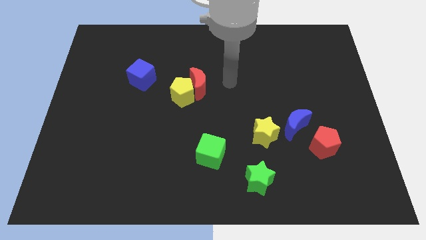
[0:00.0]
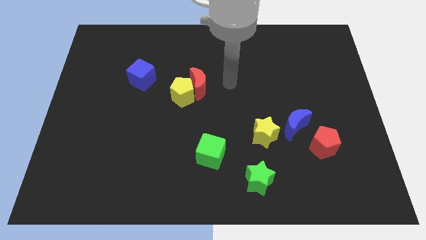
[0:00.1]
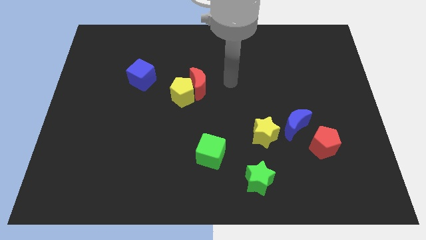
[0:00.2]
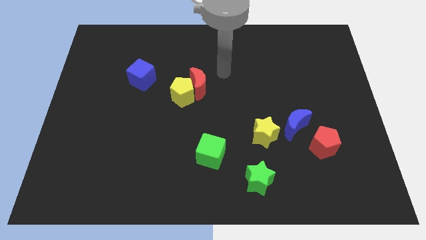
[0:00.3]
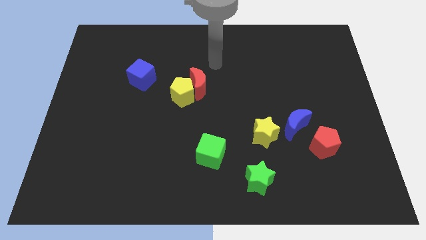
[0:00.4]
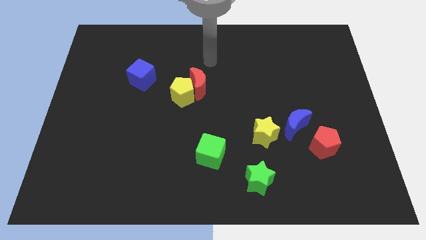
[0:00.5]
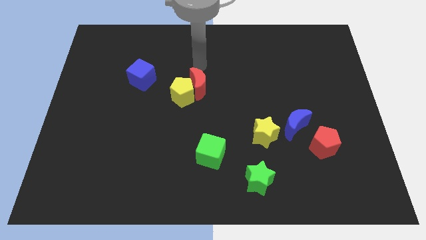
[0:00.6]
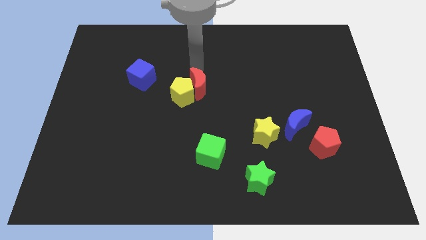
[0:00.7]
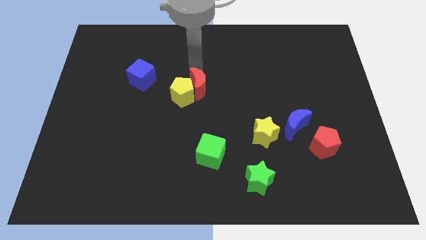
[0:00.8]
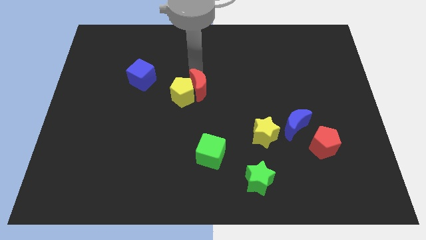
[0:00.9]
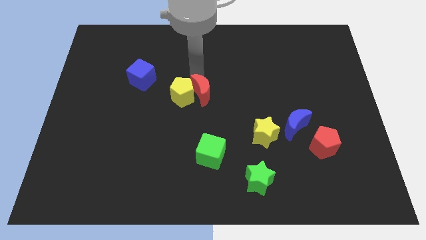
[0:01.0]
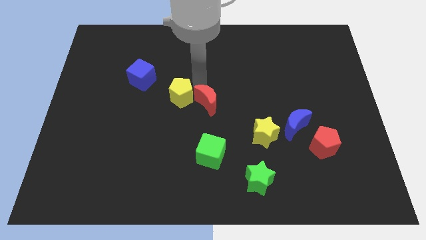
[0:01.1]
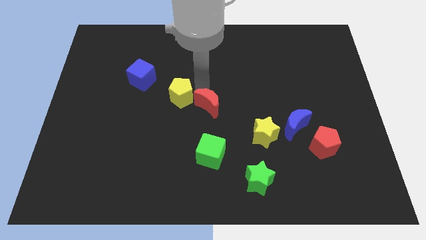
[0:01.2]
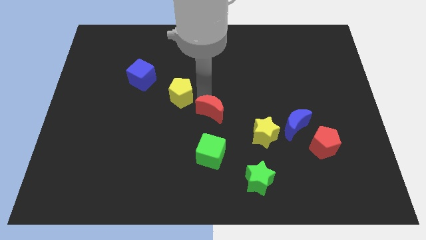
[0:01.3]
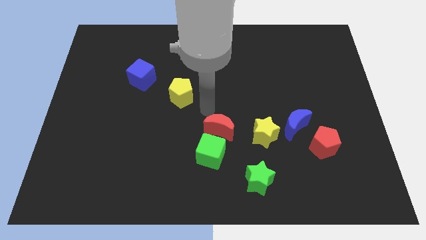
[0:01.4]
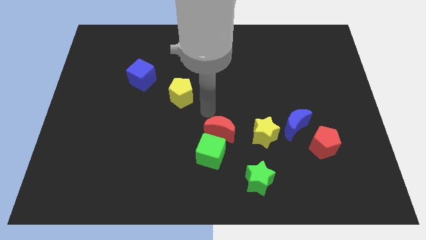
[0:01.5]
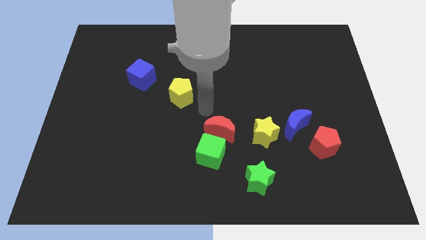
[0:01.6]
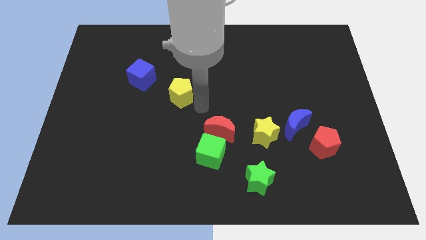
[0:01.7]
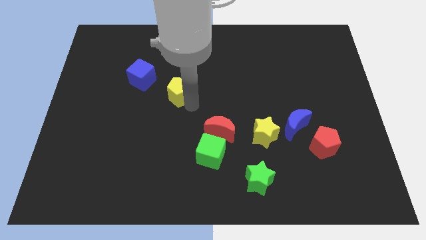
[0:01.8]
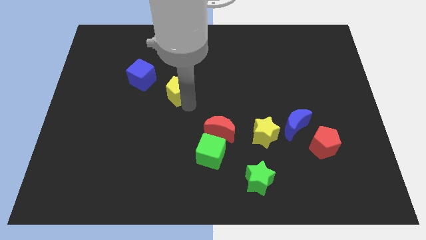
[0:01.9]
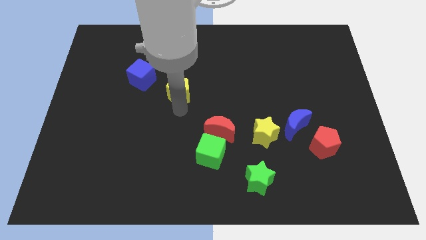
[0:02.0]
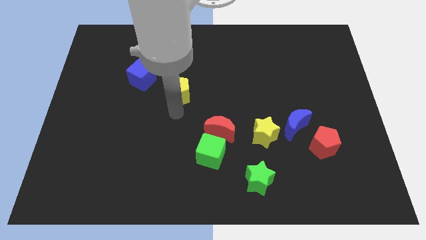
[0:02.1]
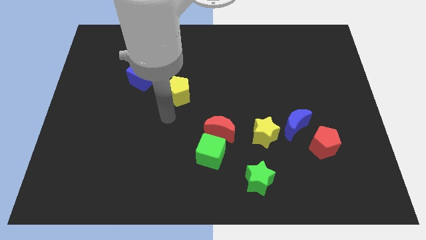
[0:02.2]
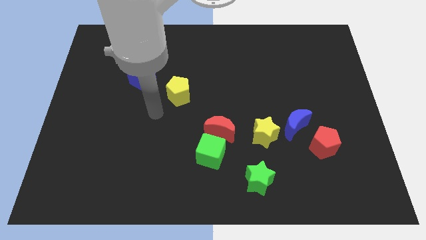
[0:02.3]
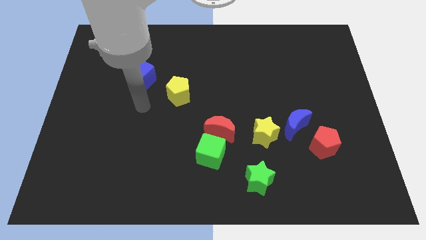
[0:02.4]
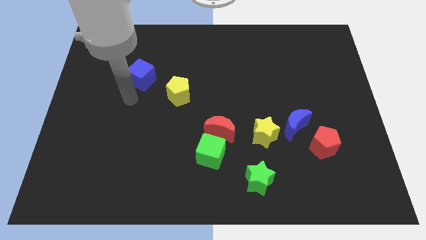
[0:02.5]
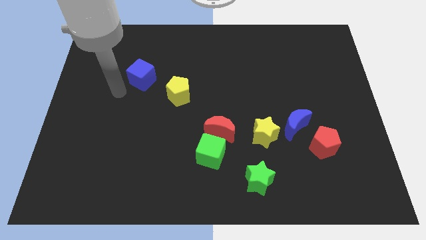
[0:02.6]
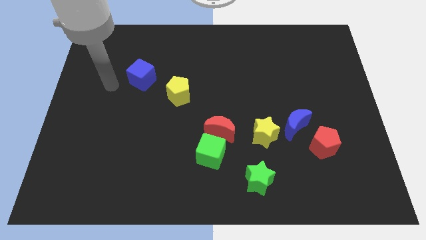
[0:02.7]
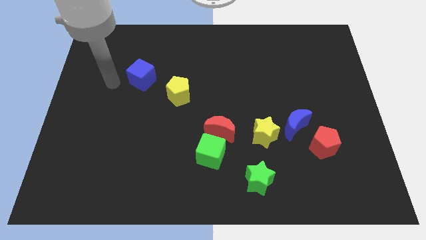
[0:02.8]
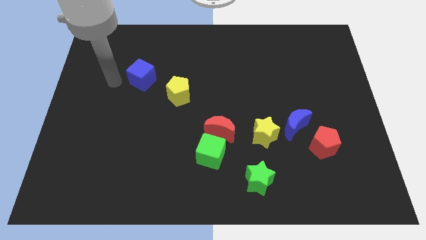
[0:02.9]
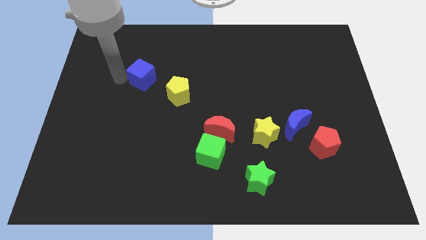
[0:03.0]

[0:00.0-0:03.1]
separate the red moon and yellow pentagon

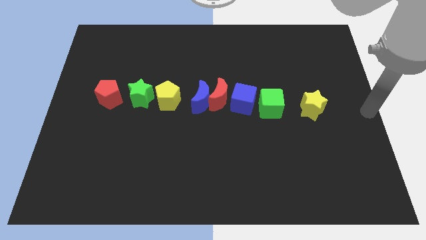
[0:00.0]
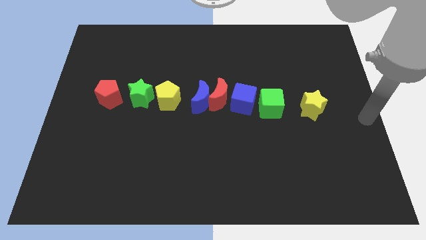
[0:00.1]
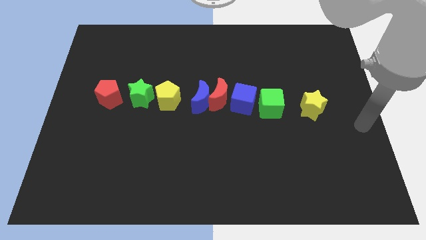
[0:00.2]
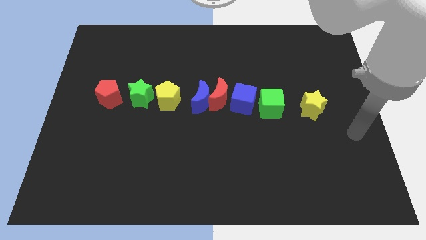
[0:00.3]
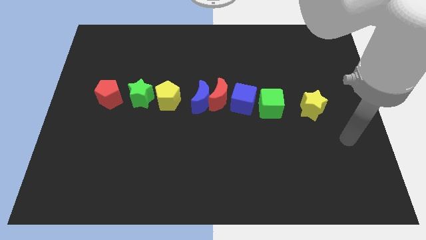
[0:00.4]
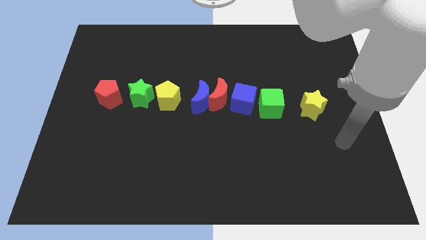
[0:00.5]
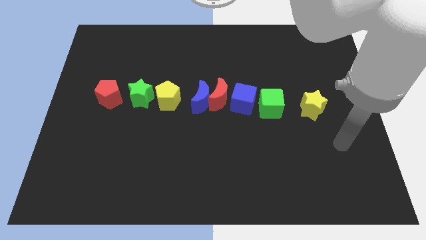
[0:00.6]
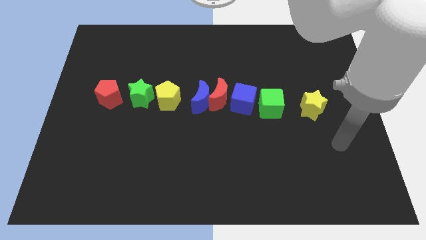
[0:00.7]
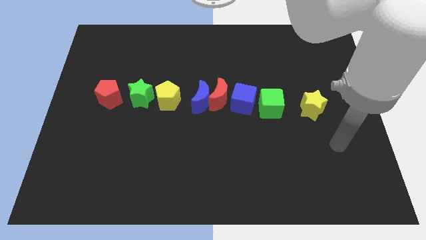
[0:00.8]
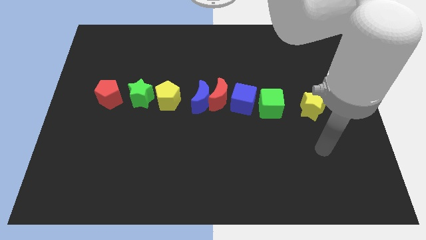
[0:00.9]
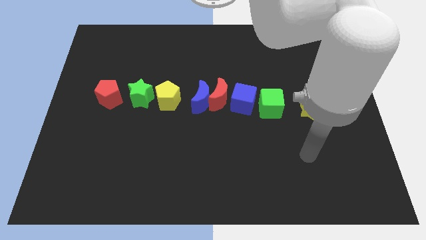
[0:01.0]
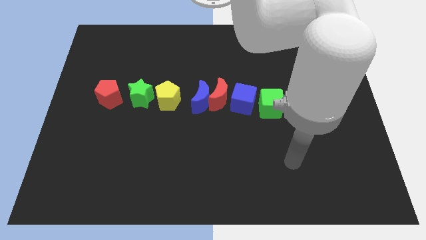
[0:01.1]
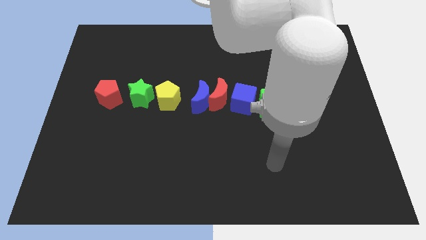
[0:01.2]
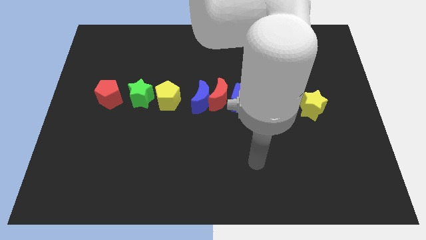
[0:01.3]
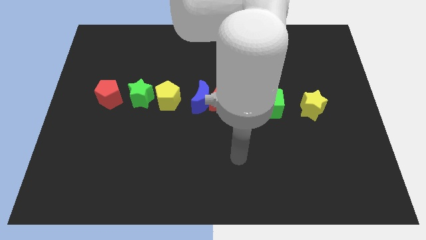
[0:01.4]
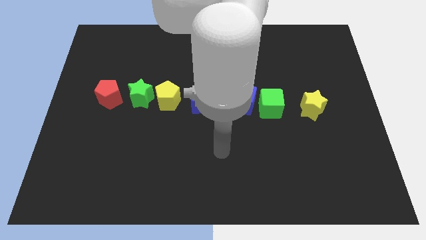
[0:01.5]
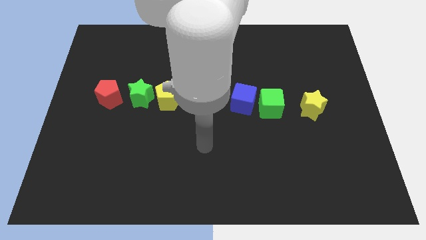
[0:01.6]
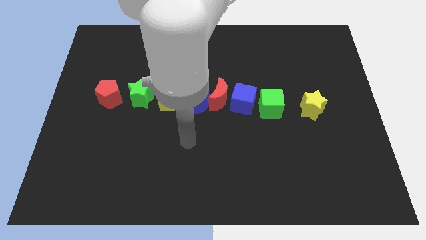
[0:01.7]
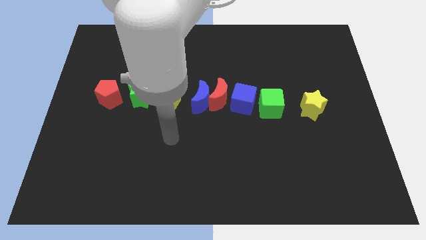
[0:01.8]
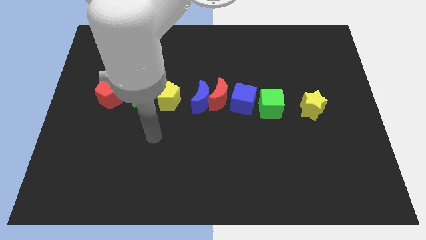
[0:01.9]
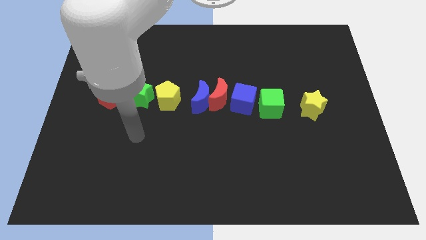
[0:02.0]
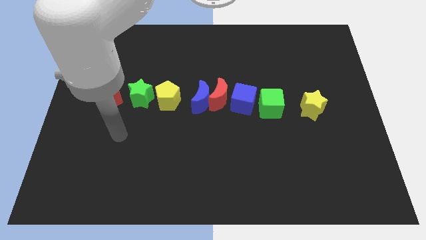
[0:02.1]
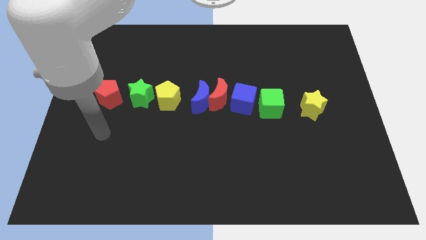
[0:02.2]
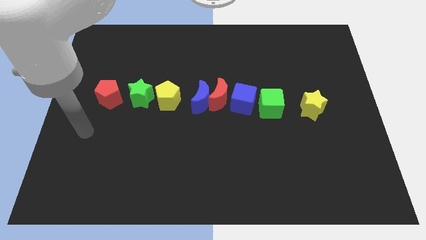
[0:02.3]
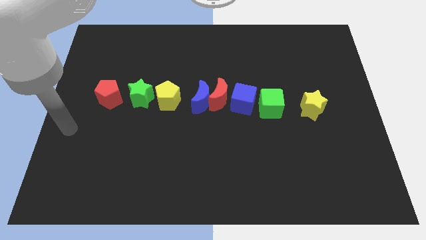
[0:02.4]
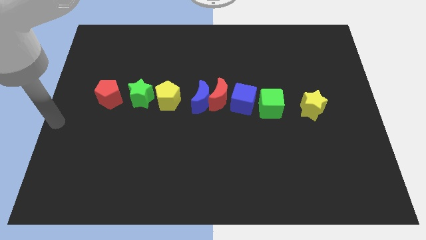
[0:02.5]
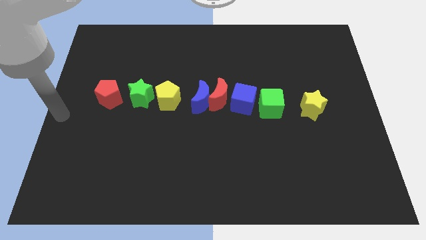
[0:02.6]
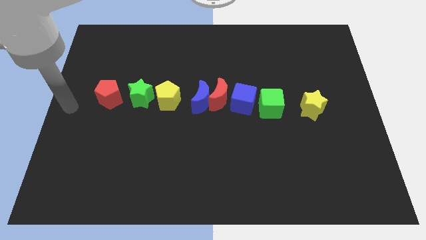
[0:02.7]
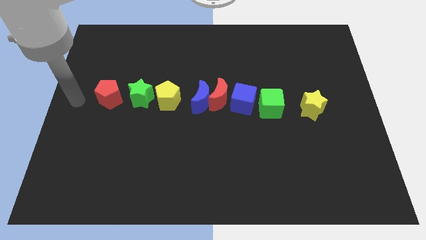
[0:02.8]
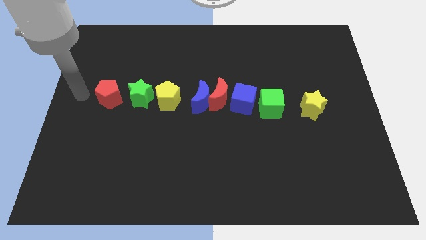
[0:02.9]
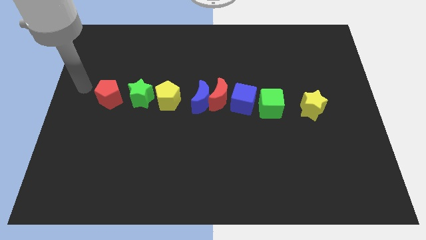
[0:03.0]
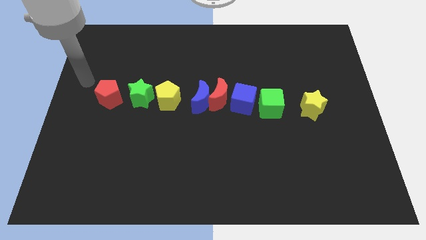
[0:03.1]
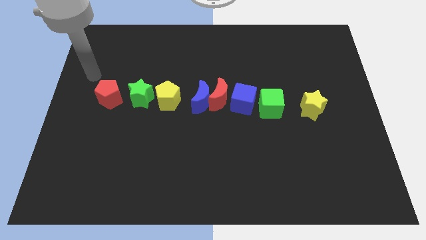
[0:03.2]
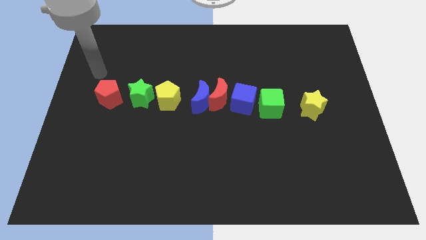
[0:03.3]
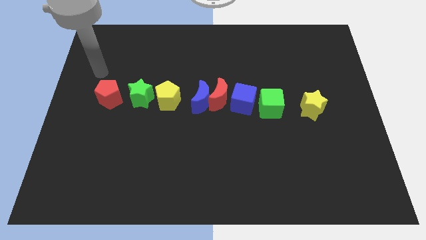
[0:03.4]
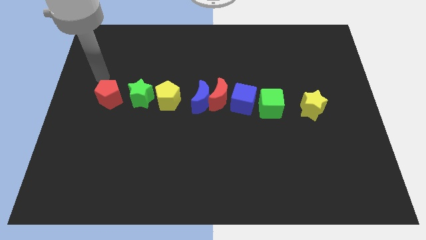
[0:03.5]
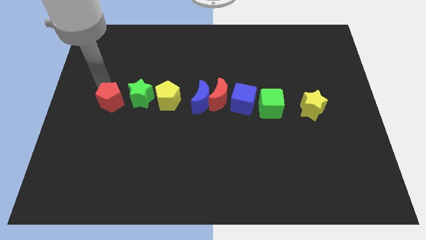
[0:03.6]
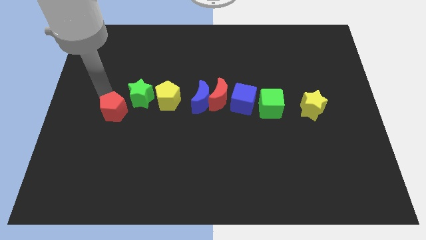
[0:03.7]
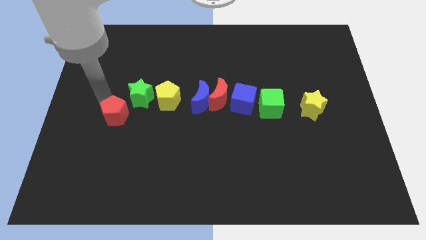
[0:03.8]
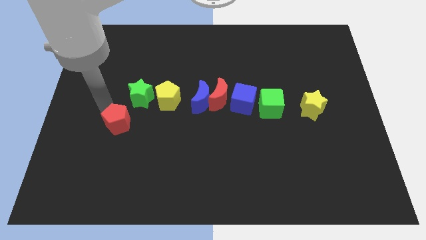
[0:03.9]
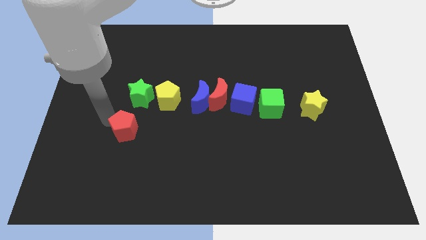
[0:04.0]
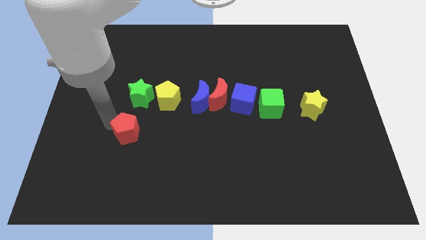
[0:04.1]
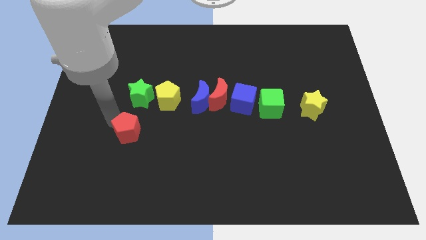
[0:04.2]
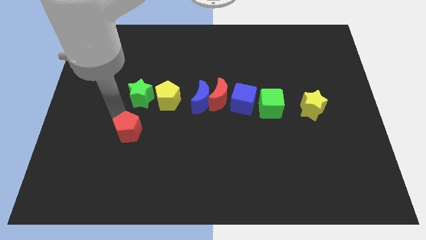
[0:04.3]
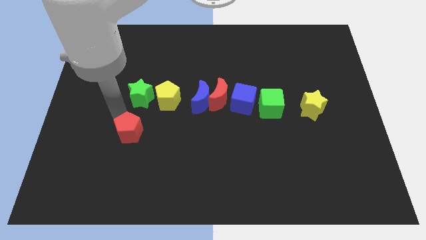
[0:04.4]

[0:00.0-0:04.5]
separate the red pentagon from the horizontal line

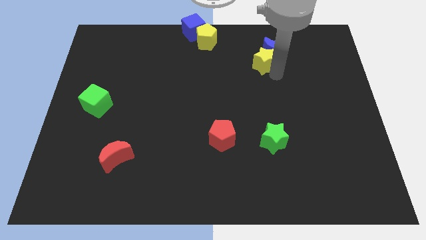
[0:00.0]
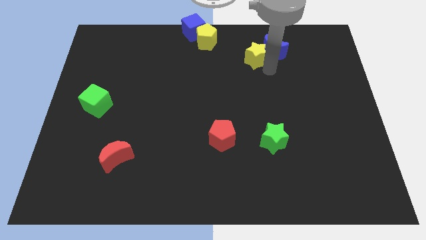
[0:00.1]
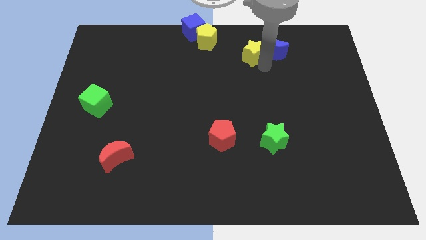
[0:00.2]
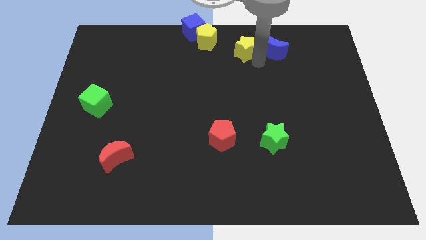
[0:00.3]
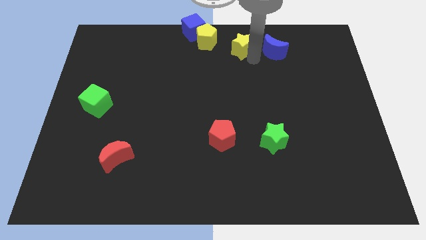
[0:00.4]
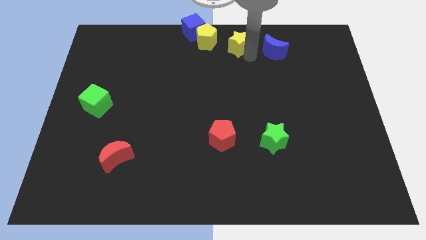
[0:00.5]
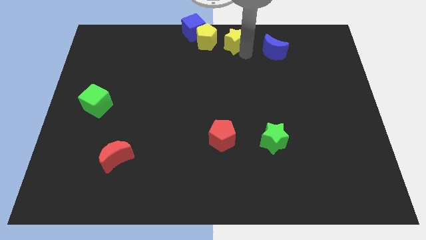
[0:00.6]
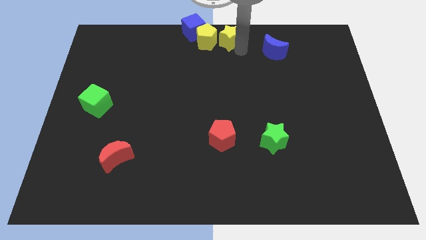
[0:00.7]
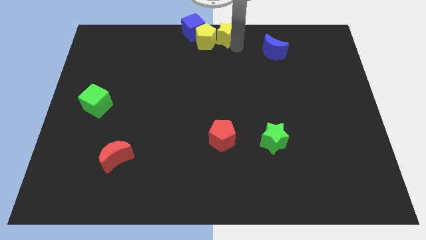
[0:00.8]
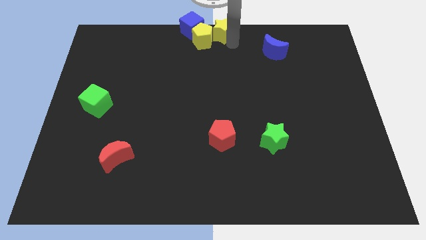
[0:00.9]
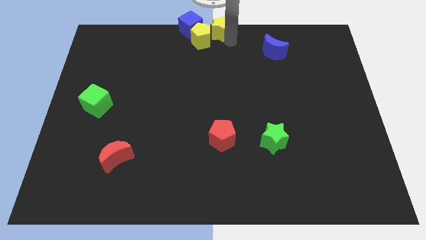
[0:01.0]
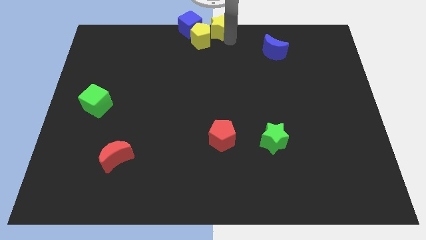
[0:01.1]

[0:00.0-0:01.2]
push the yellow star to the top center of the board
